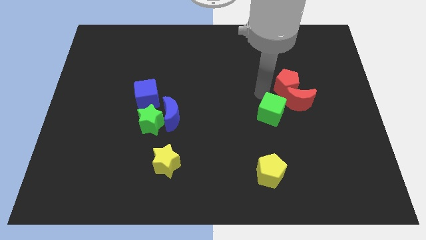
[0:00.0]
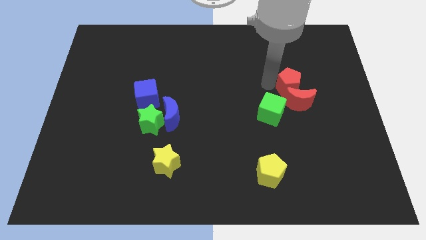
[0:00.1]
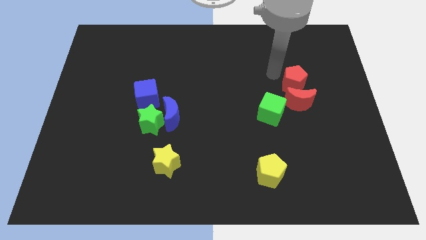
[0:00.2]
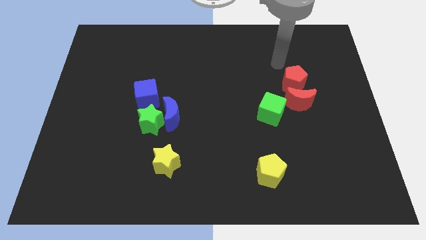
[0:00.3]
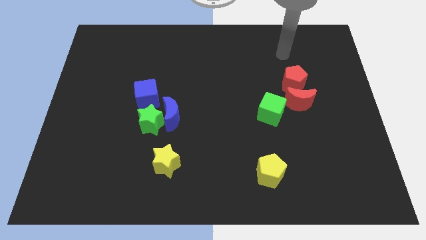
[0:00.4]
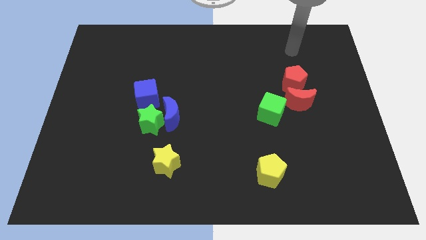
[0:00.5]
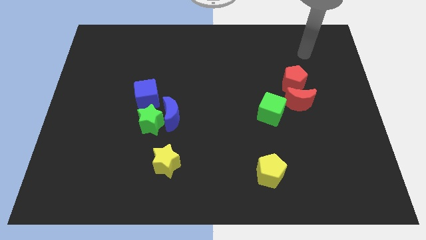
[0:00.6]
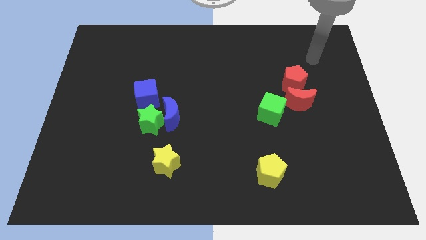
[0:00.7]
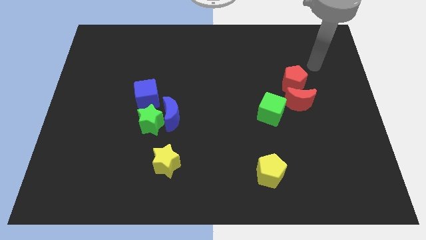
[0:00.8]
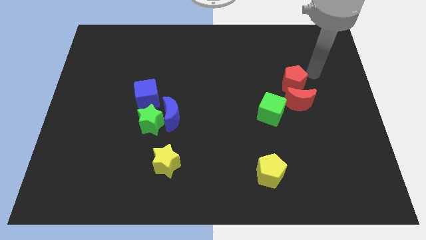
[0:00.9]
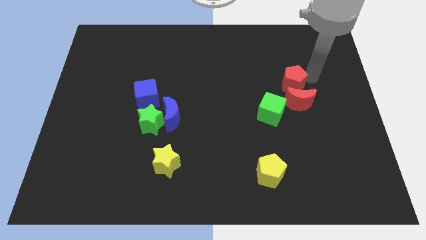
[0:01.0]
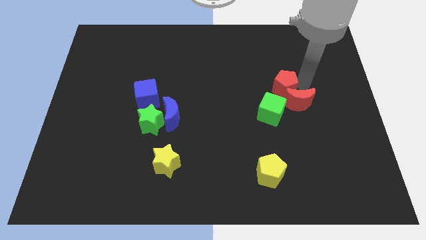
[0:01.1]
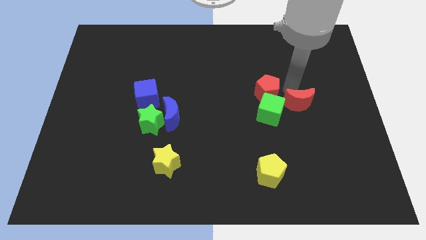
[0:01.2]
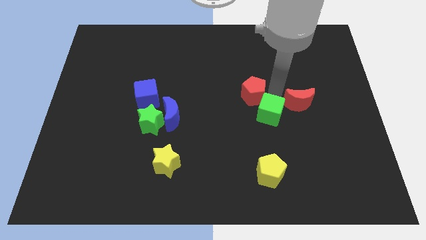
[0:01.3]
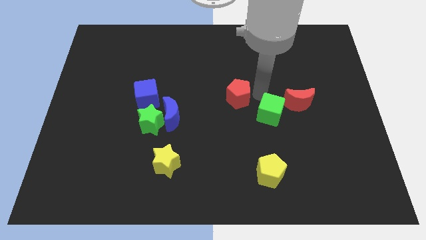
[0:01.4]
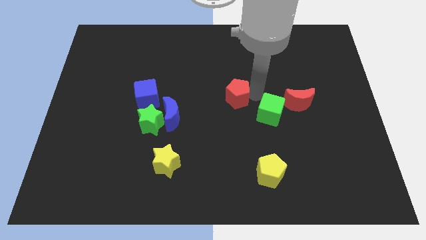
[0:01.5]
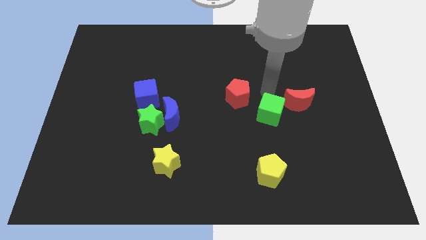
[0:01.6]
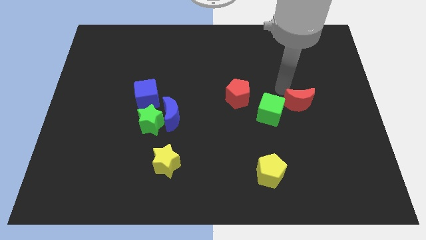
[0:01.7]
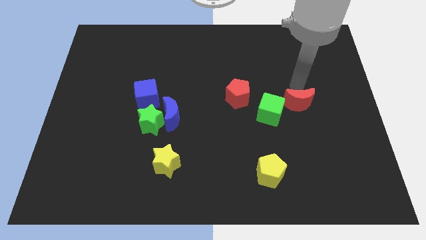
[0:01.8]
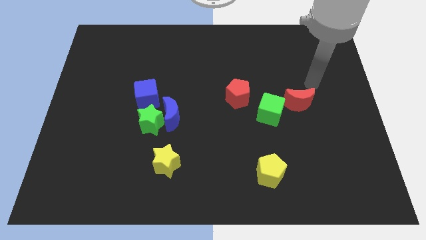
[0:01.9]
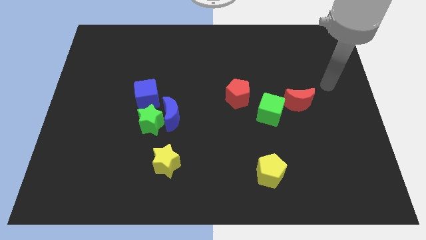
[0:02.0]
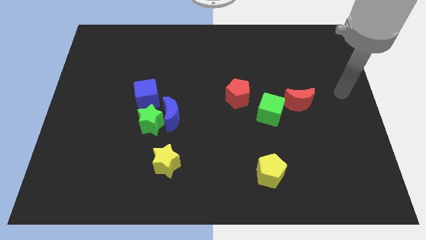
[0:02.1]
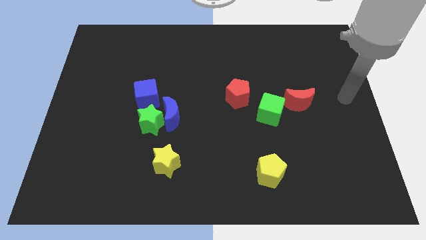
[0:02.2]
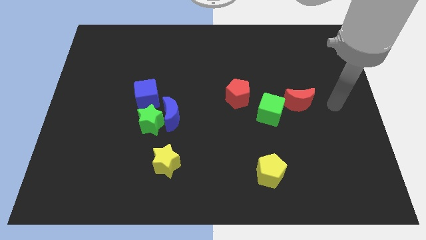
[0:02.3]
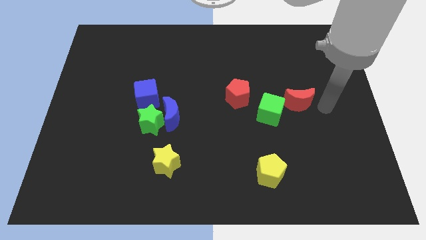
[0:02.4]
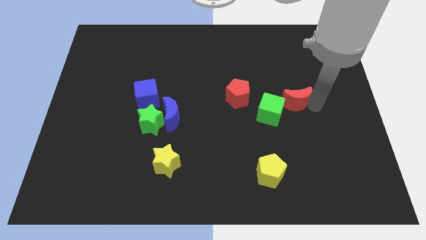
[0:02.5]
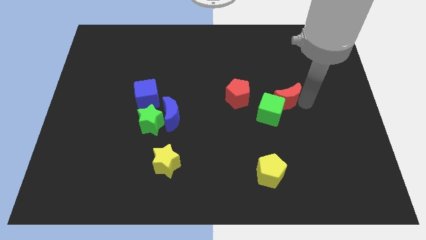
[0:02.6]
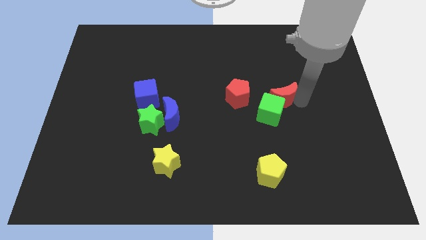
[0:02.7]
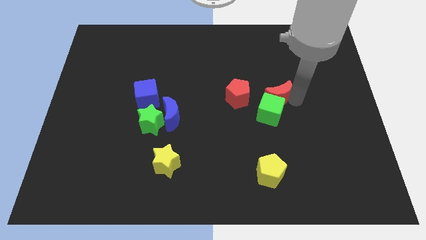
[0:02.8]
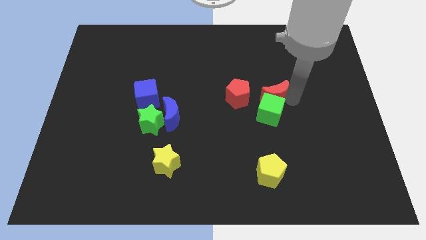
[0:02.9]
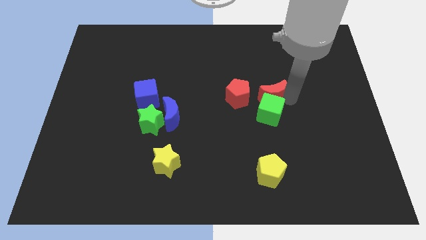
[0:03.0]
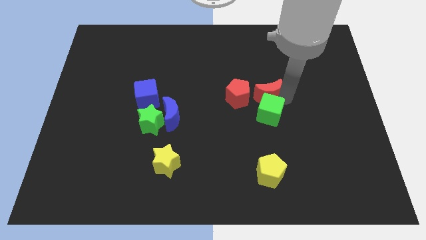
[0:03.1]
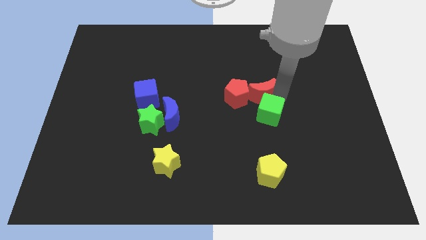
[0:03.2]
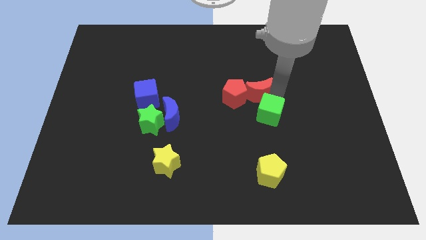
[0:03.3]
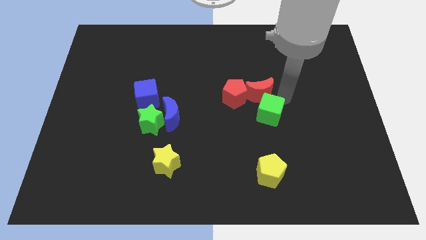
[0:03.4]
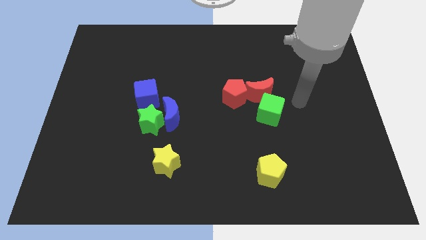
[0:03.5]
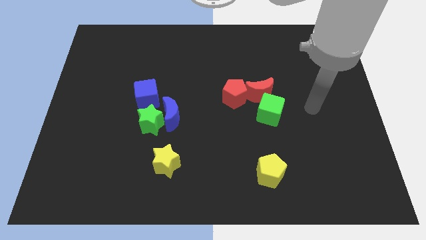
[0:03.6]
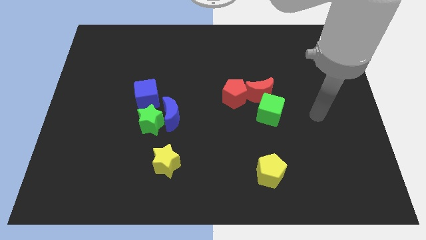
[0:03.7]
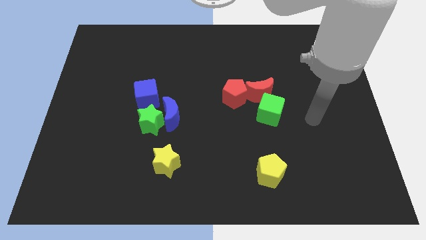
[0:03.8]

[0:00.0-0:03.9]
push the red pentagon into the red crescent

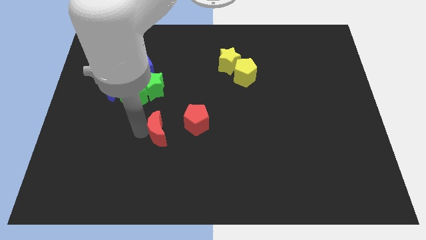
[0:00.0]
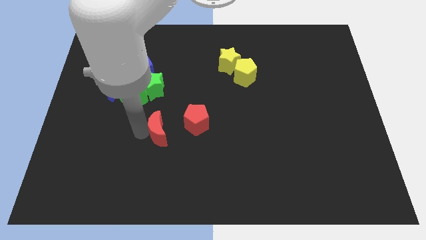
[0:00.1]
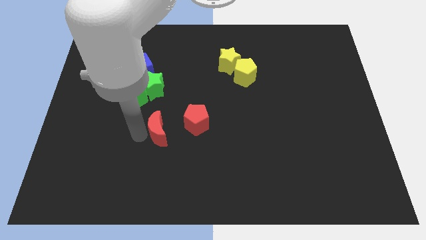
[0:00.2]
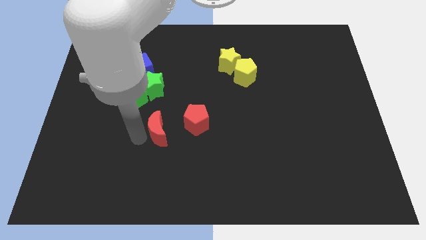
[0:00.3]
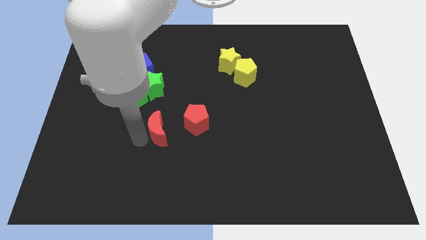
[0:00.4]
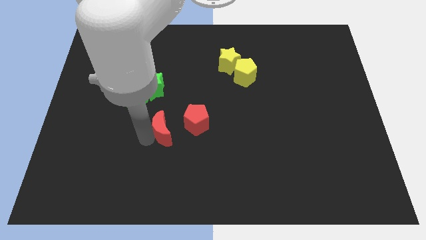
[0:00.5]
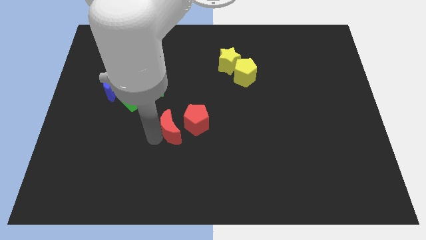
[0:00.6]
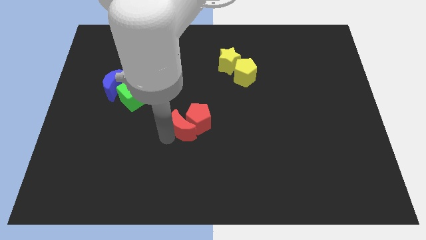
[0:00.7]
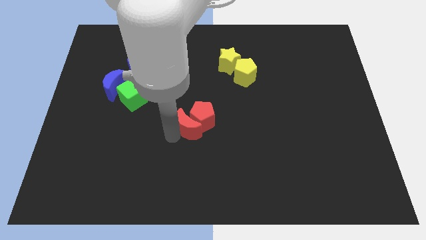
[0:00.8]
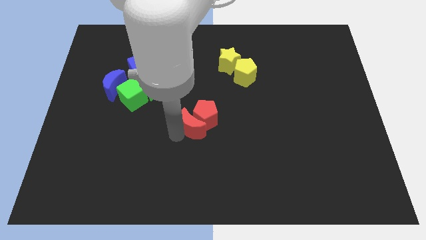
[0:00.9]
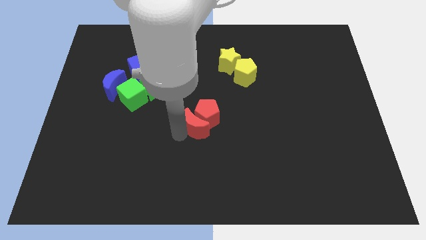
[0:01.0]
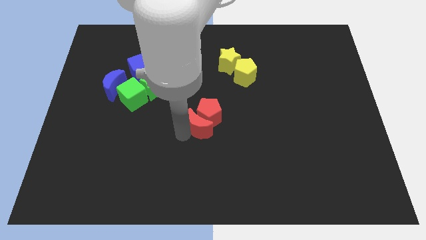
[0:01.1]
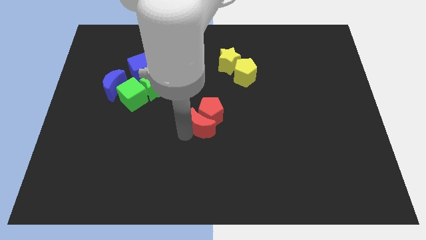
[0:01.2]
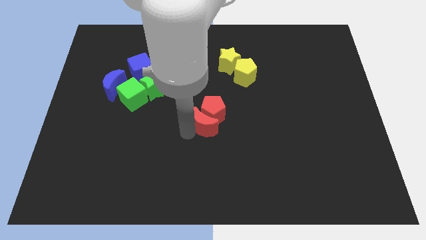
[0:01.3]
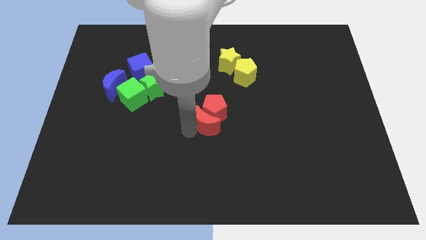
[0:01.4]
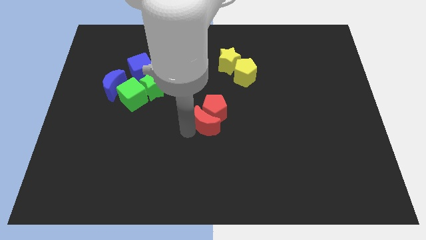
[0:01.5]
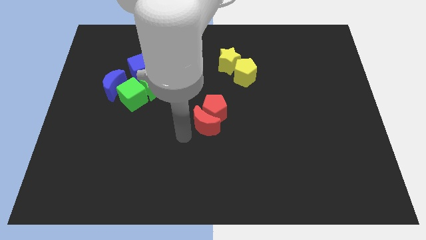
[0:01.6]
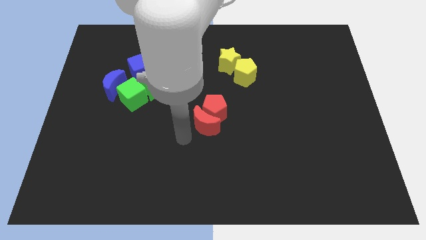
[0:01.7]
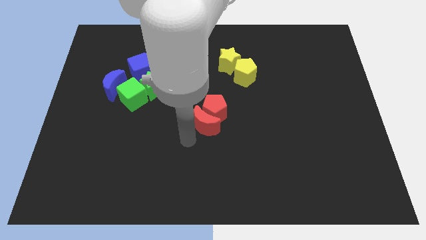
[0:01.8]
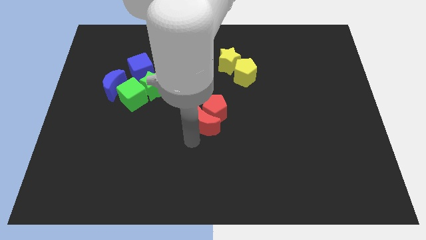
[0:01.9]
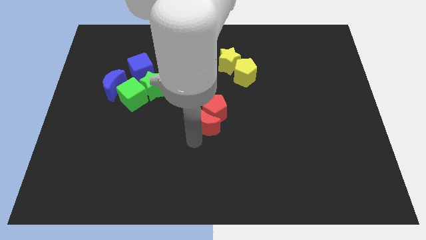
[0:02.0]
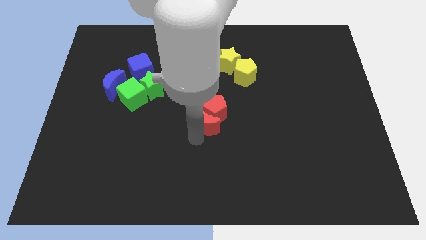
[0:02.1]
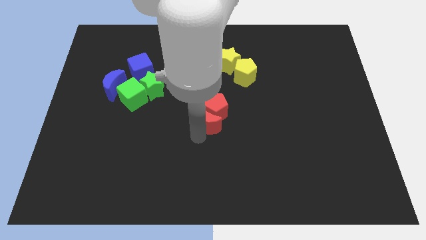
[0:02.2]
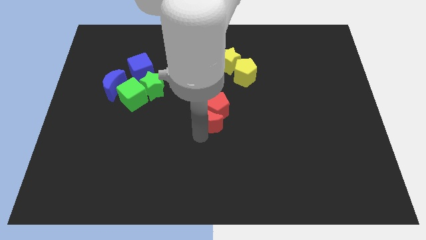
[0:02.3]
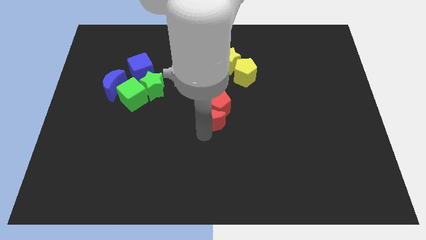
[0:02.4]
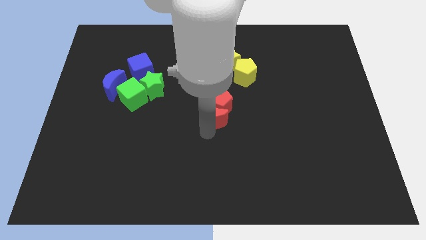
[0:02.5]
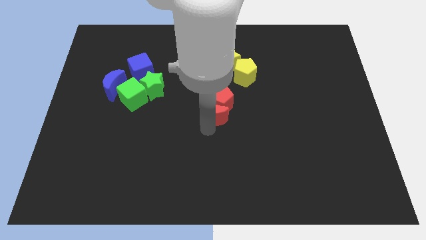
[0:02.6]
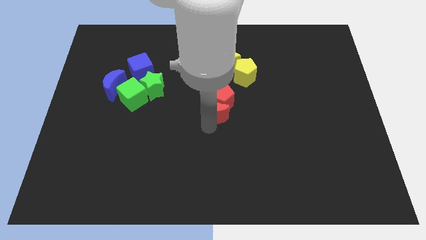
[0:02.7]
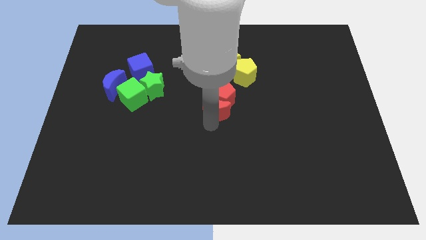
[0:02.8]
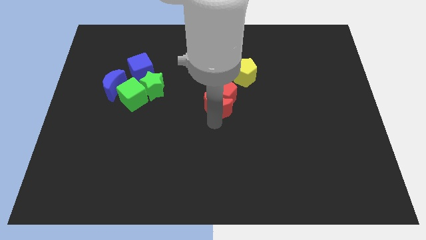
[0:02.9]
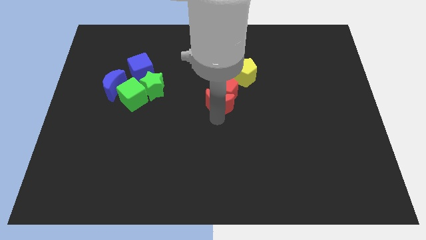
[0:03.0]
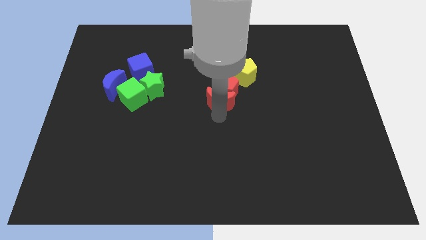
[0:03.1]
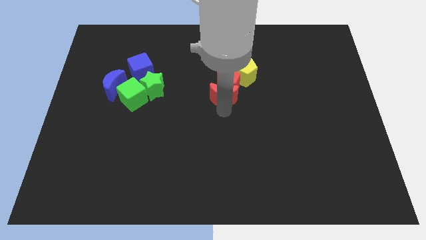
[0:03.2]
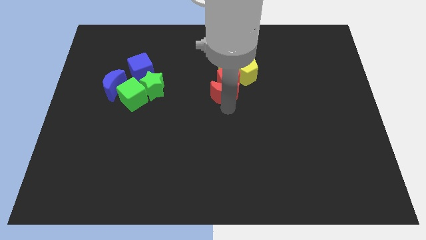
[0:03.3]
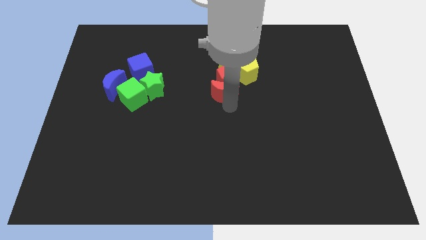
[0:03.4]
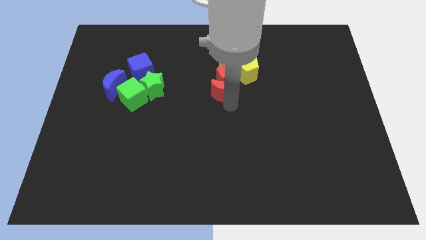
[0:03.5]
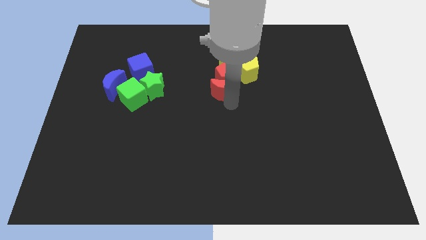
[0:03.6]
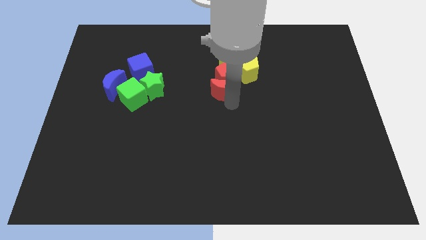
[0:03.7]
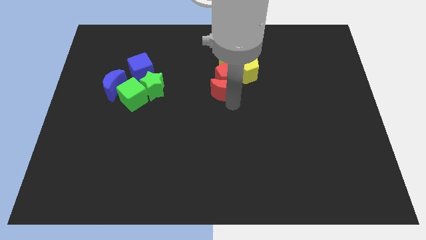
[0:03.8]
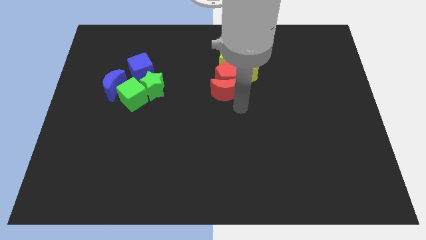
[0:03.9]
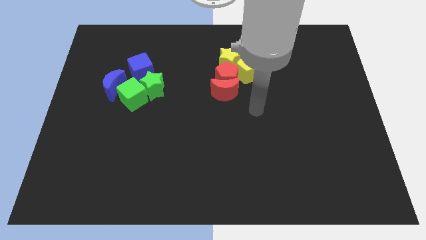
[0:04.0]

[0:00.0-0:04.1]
push the red things and yellow objects together at the right side of the group of blocks

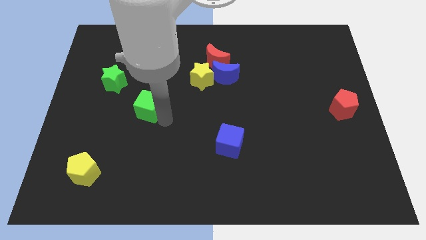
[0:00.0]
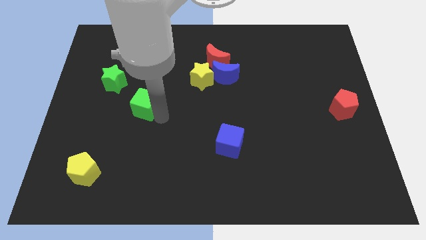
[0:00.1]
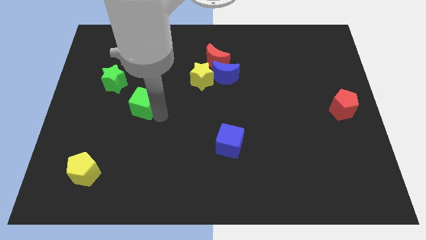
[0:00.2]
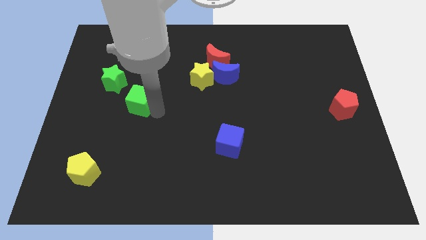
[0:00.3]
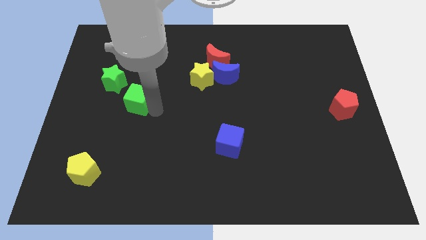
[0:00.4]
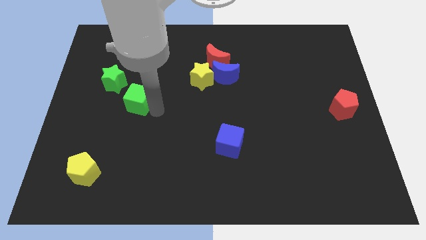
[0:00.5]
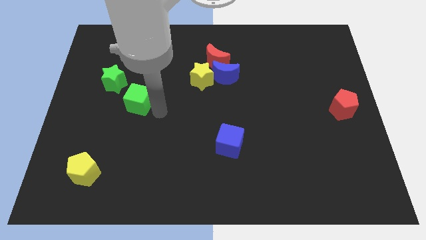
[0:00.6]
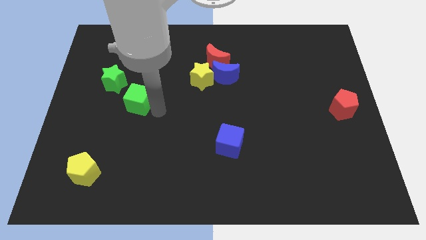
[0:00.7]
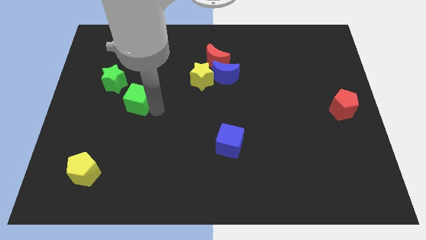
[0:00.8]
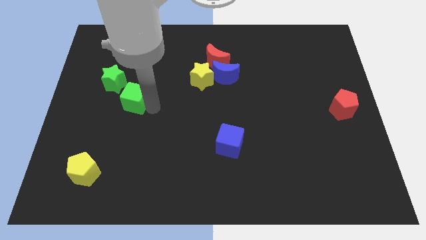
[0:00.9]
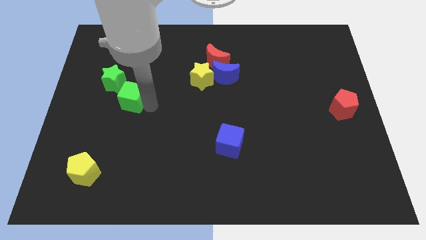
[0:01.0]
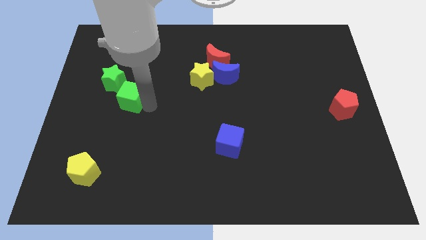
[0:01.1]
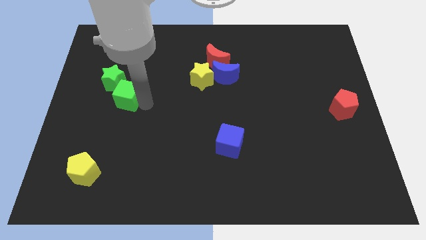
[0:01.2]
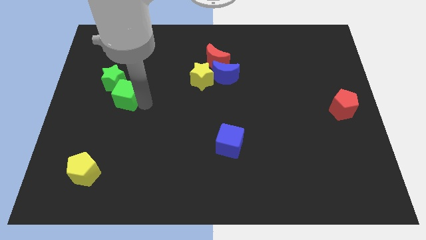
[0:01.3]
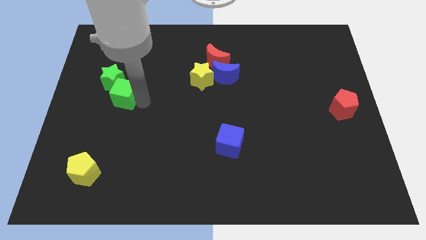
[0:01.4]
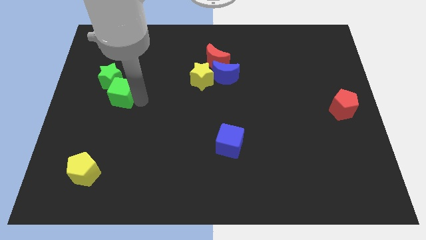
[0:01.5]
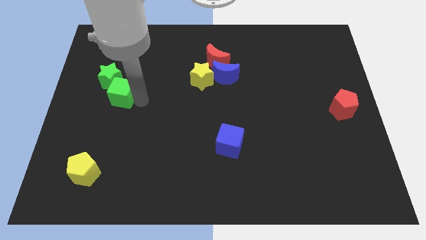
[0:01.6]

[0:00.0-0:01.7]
join green cube with the green star
